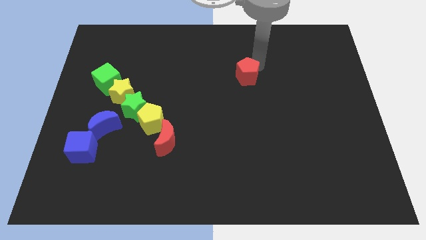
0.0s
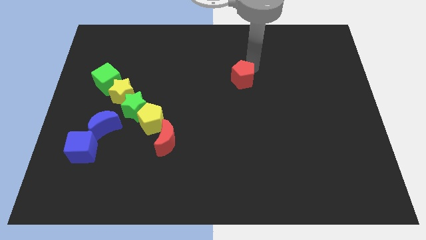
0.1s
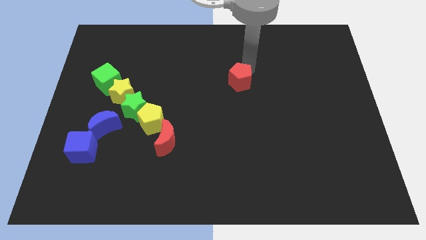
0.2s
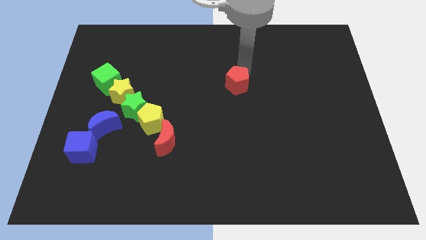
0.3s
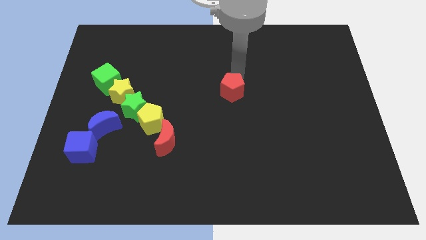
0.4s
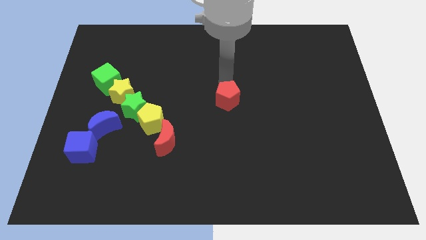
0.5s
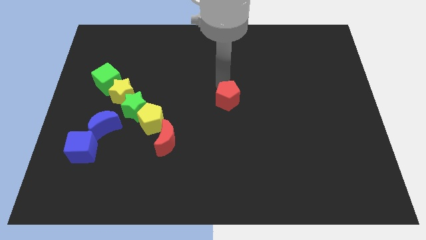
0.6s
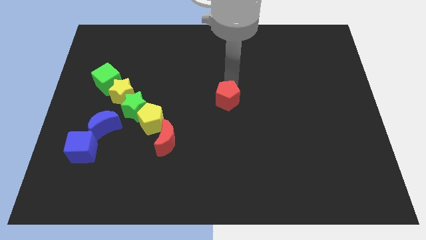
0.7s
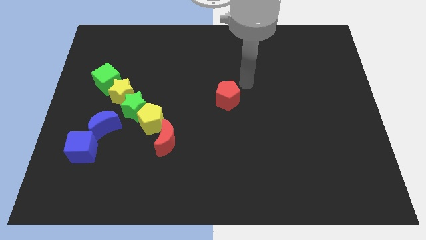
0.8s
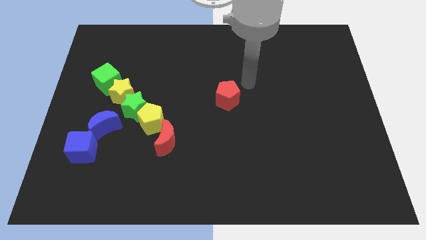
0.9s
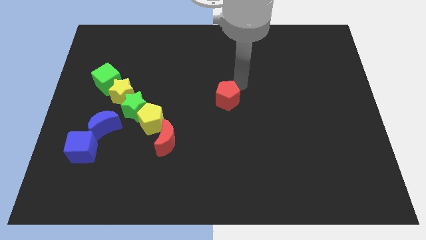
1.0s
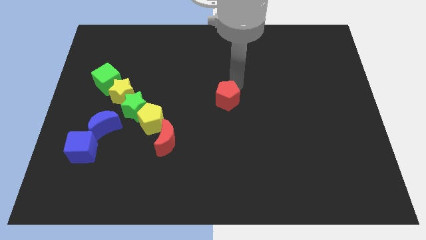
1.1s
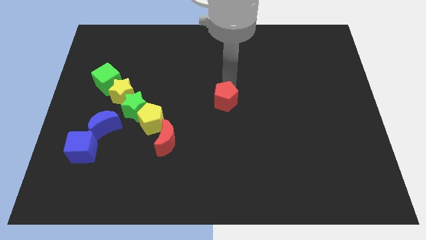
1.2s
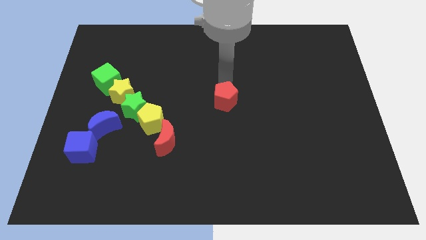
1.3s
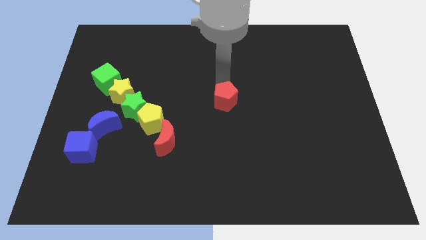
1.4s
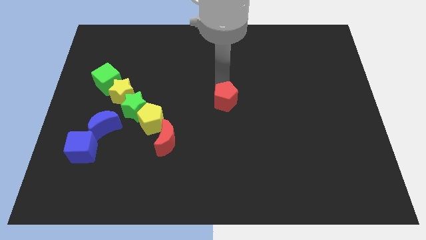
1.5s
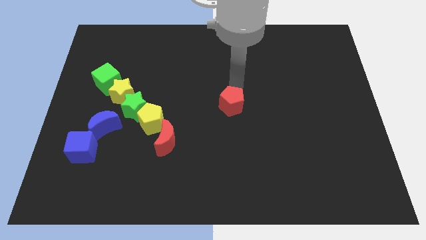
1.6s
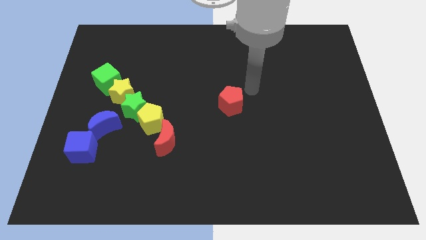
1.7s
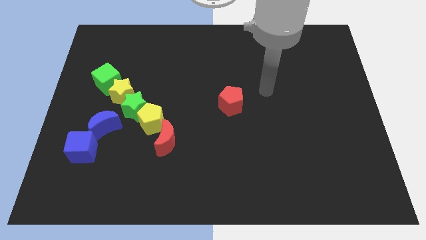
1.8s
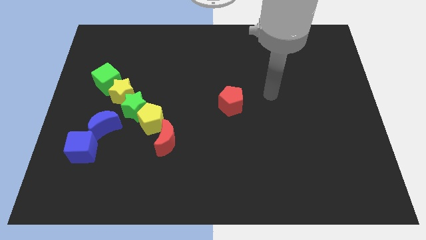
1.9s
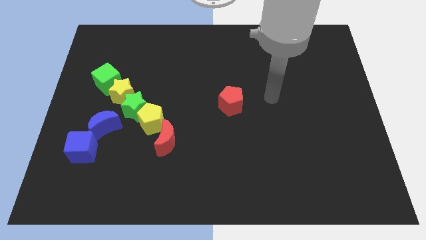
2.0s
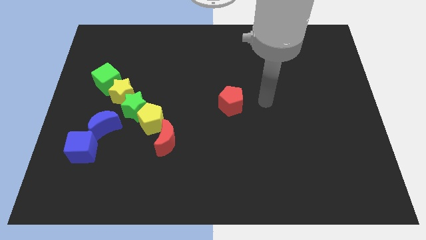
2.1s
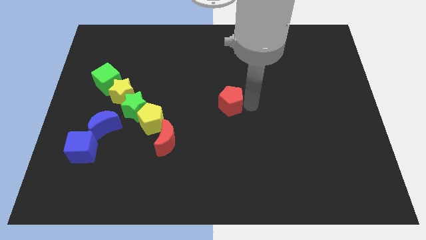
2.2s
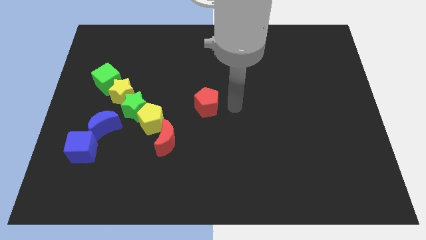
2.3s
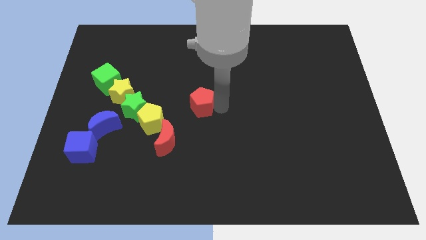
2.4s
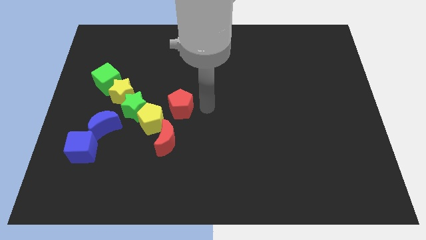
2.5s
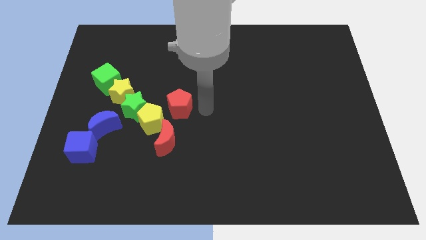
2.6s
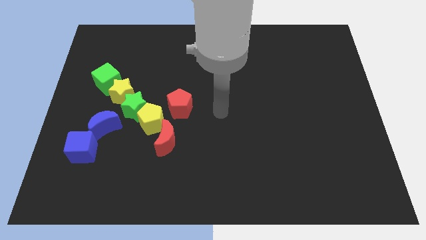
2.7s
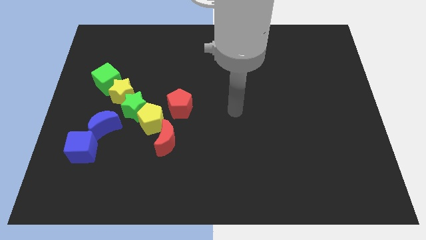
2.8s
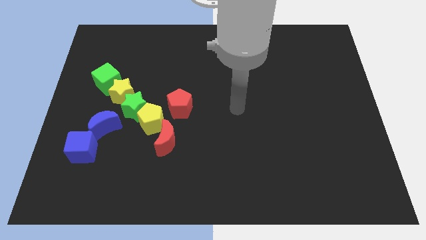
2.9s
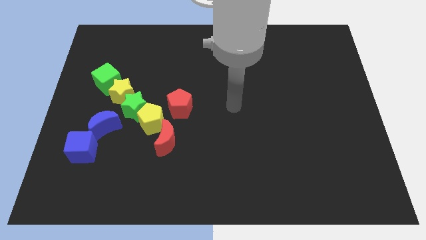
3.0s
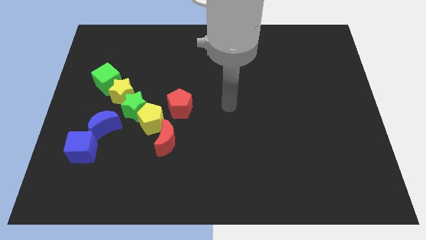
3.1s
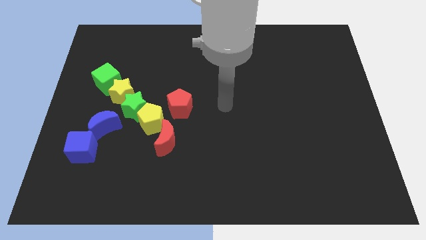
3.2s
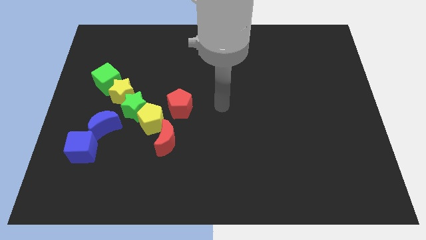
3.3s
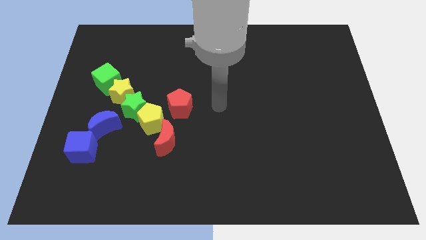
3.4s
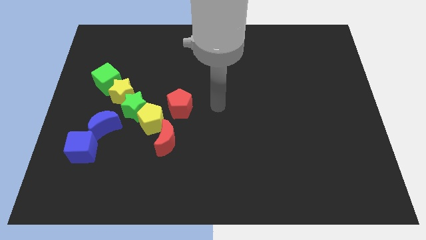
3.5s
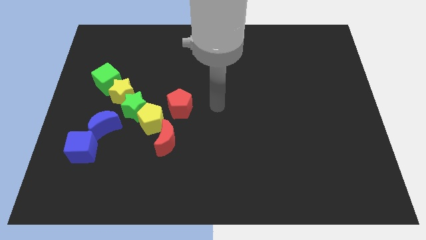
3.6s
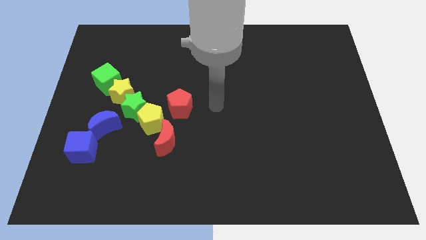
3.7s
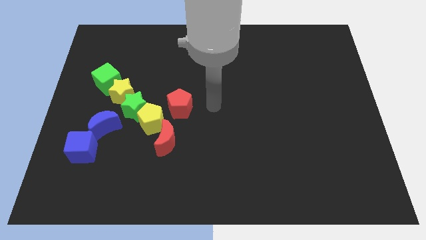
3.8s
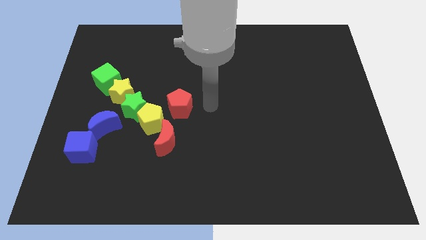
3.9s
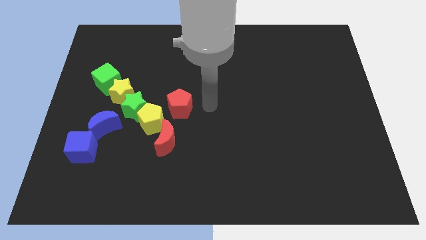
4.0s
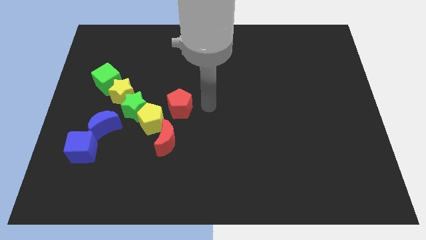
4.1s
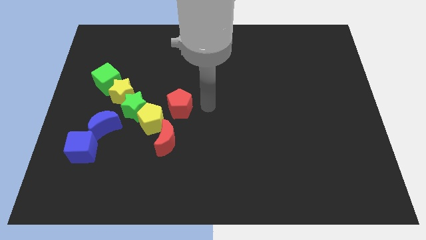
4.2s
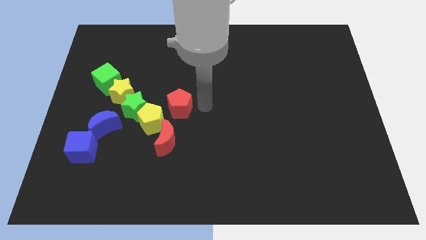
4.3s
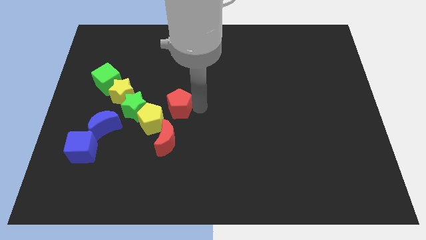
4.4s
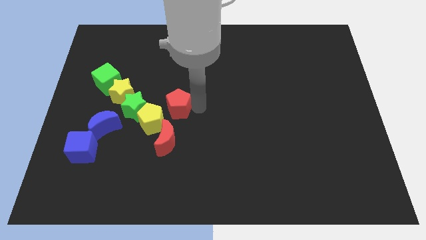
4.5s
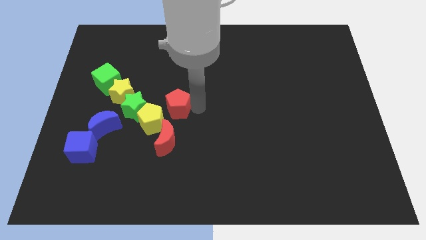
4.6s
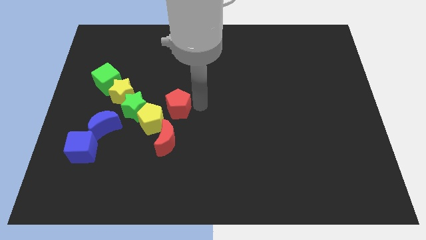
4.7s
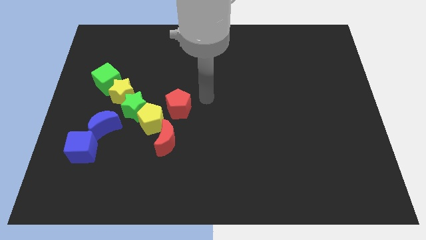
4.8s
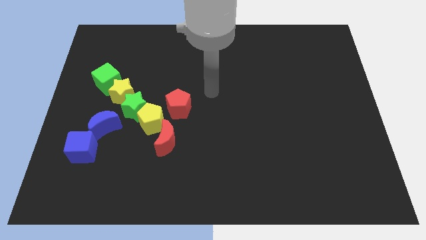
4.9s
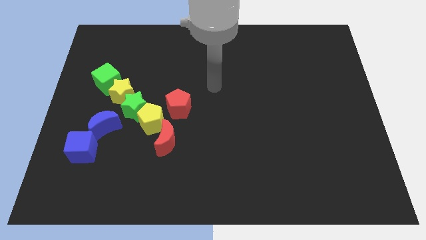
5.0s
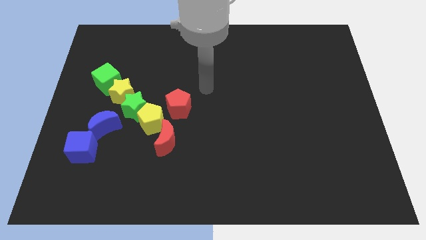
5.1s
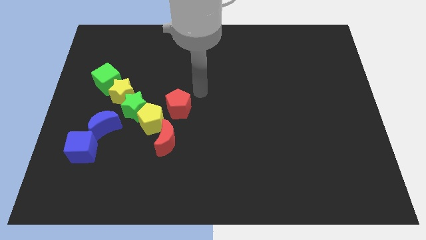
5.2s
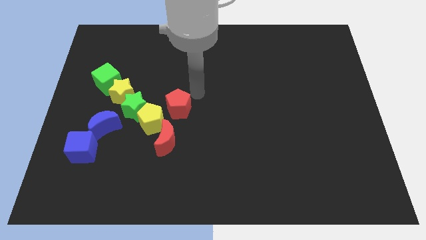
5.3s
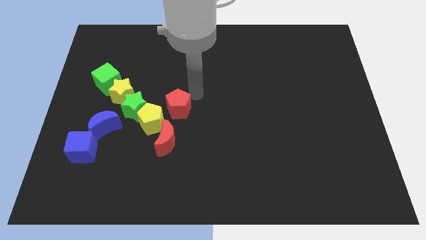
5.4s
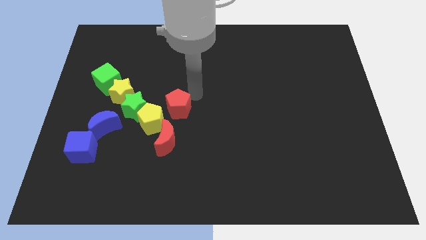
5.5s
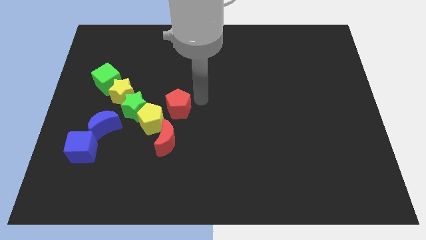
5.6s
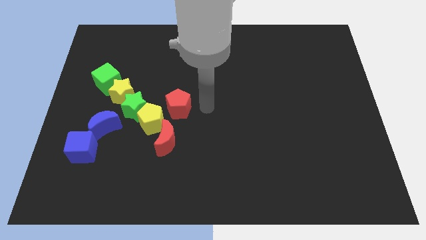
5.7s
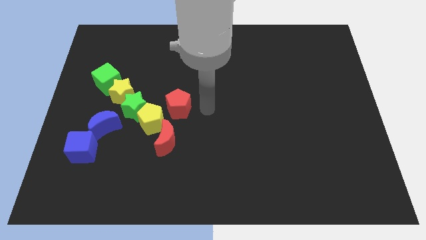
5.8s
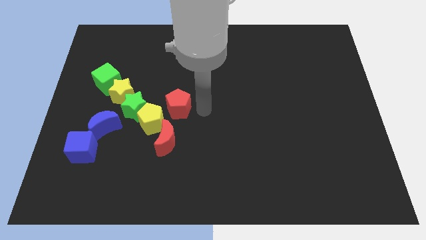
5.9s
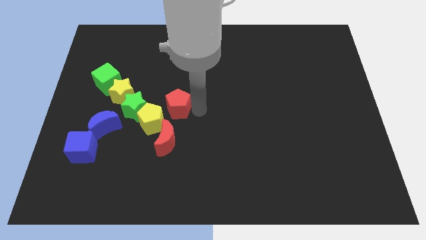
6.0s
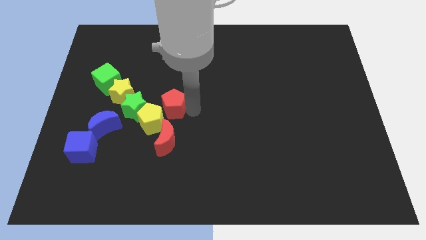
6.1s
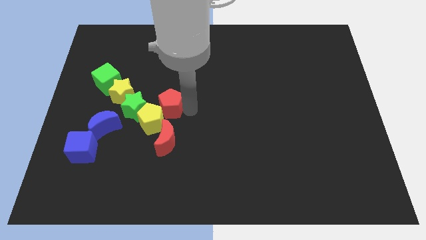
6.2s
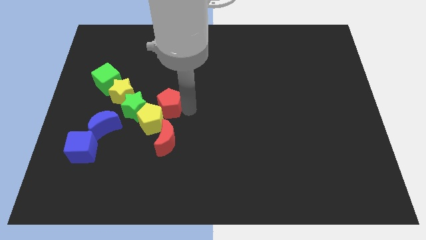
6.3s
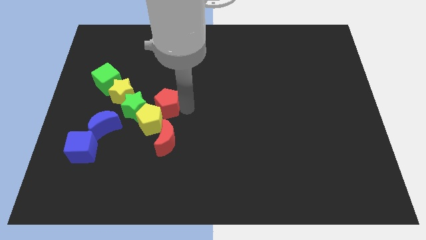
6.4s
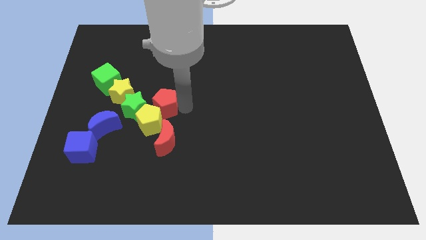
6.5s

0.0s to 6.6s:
place the red pentagon above the yellow pentagon

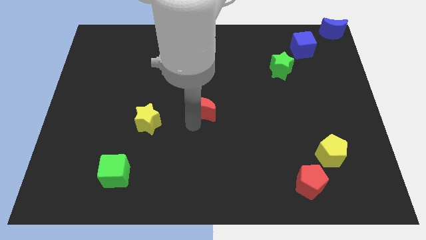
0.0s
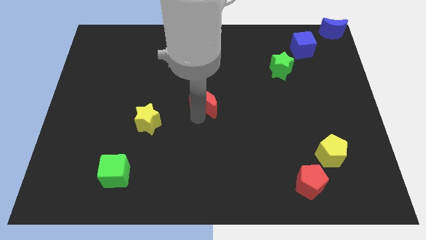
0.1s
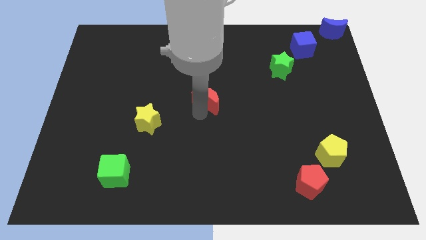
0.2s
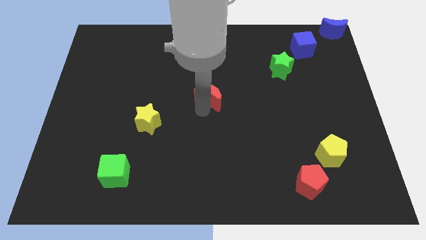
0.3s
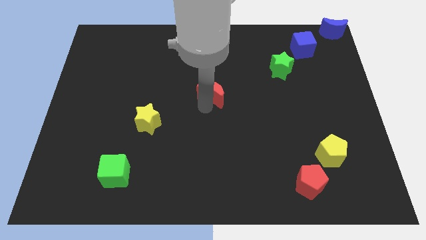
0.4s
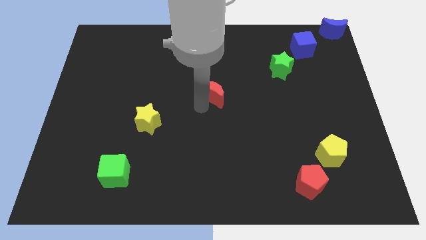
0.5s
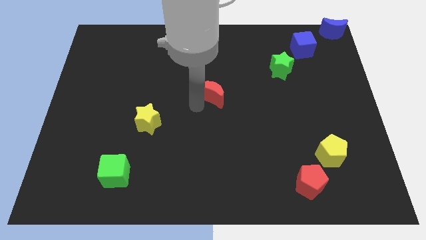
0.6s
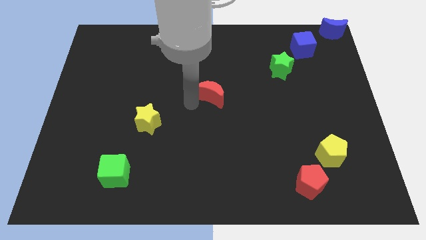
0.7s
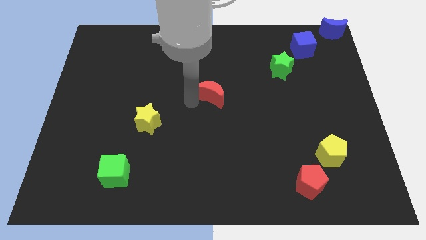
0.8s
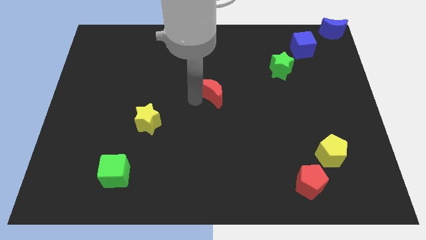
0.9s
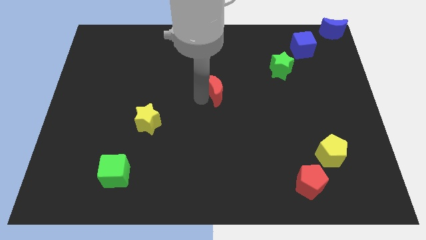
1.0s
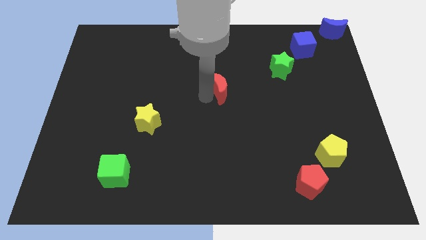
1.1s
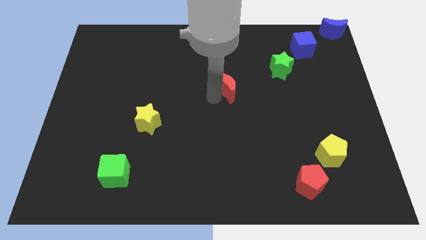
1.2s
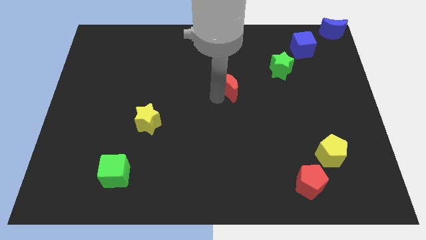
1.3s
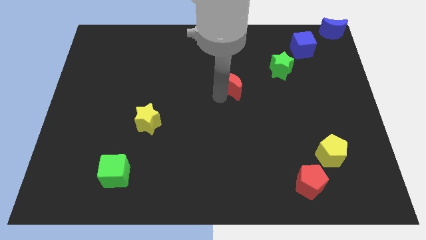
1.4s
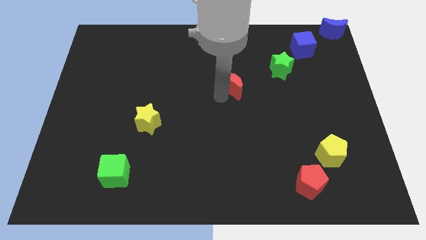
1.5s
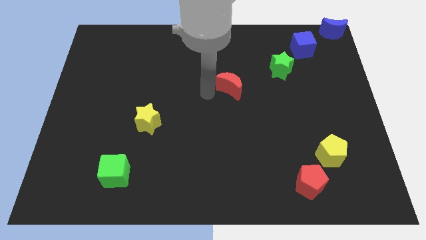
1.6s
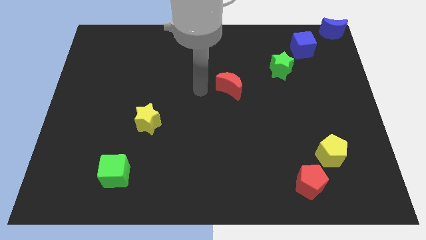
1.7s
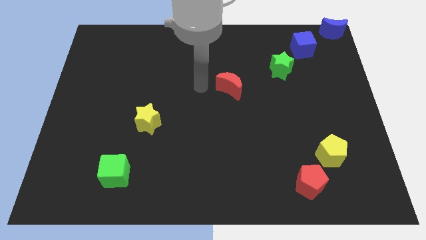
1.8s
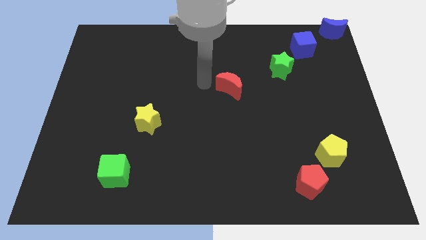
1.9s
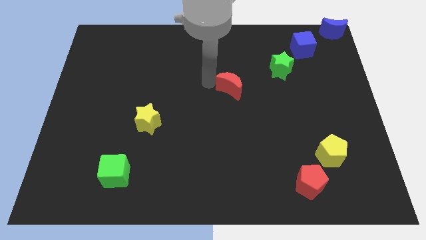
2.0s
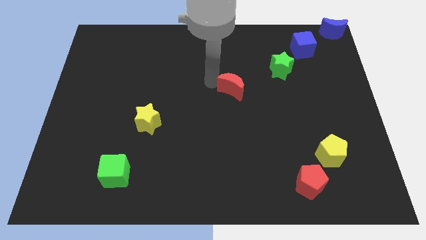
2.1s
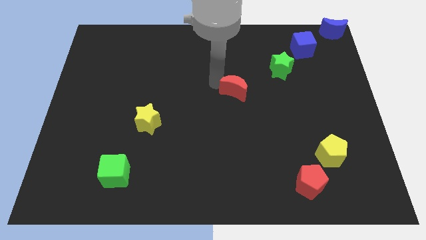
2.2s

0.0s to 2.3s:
push the red moon towards the green star
